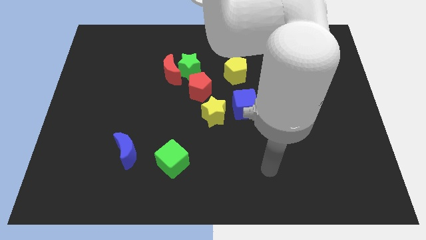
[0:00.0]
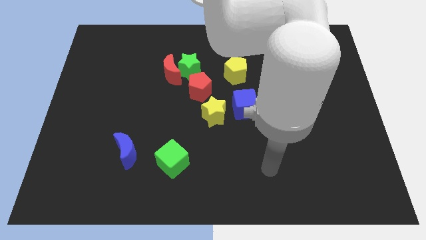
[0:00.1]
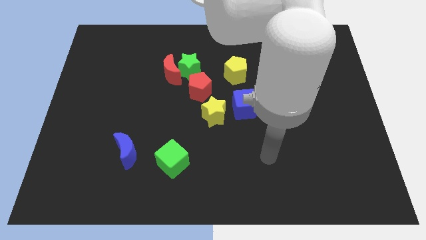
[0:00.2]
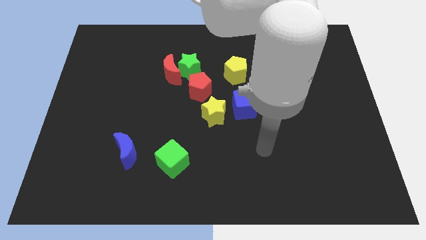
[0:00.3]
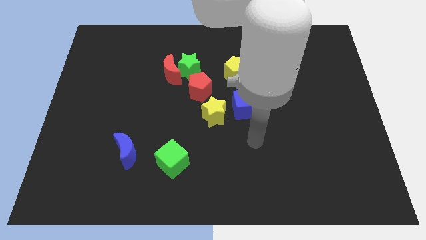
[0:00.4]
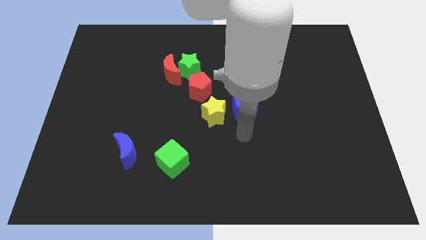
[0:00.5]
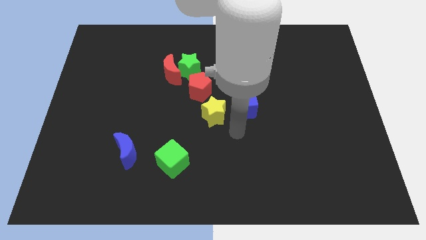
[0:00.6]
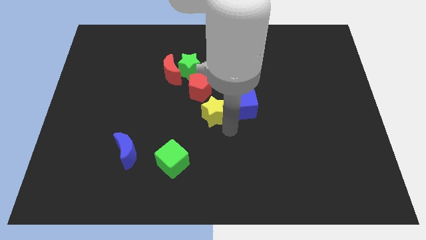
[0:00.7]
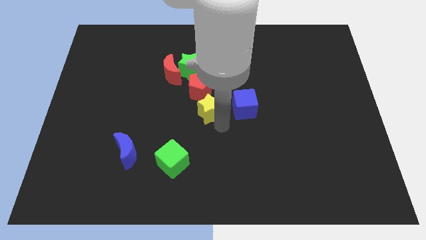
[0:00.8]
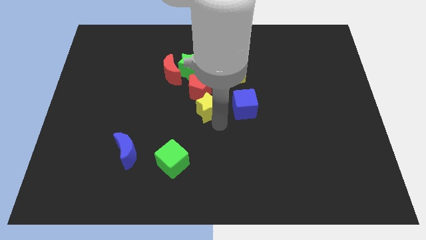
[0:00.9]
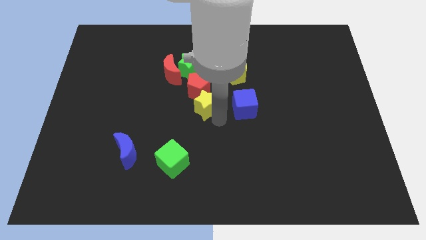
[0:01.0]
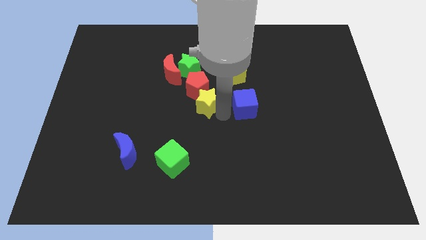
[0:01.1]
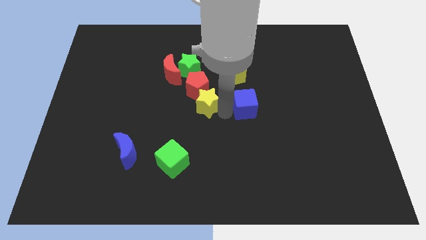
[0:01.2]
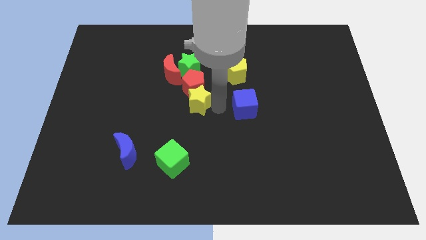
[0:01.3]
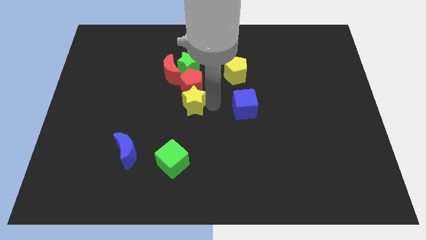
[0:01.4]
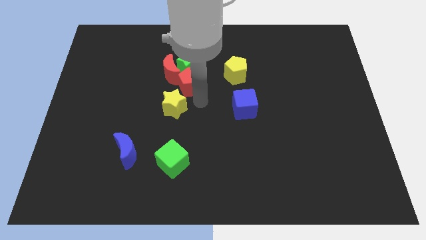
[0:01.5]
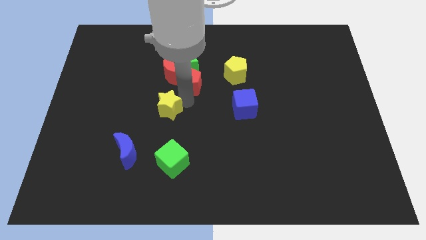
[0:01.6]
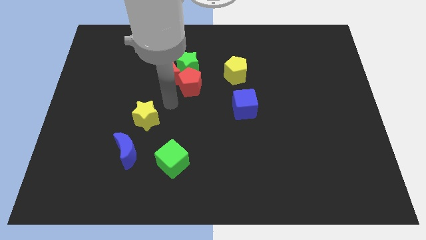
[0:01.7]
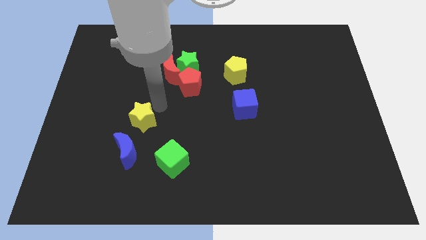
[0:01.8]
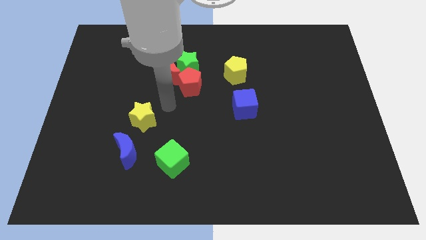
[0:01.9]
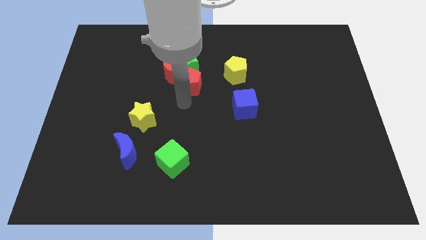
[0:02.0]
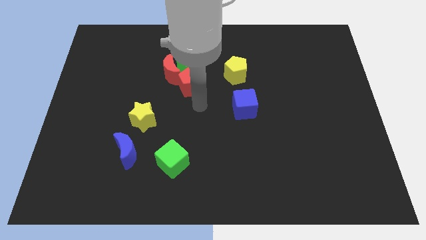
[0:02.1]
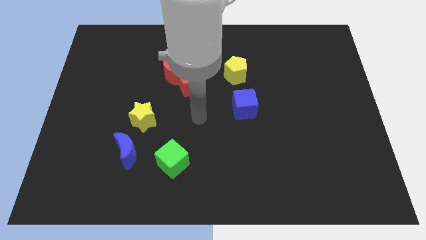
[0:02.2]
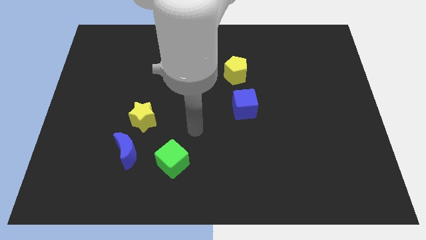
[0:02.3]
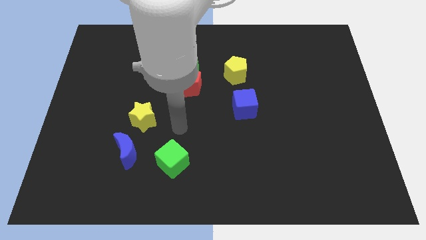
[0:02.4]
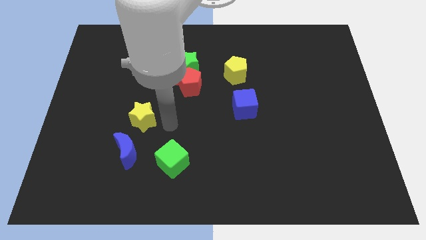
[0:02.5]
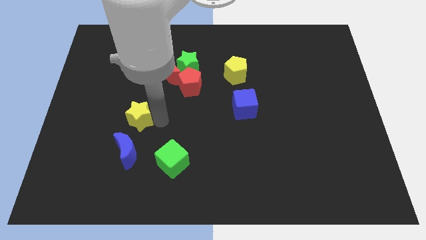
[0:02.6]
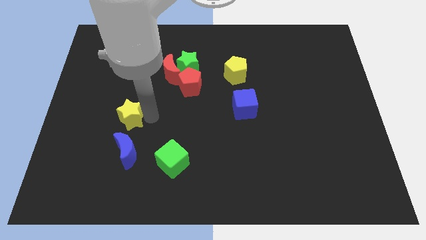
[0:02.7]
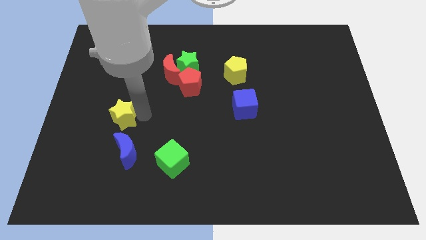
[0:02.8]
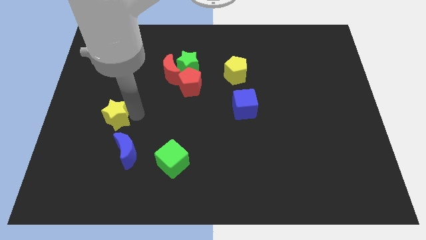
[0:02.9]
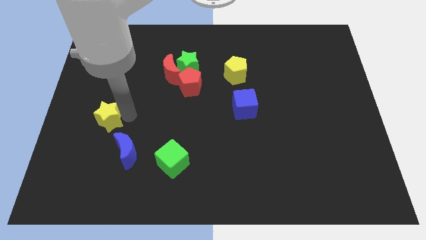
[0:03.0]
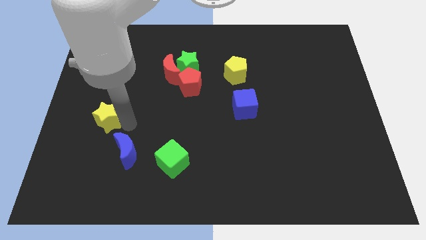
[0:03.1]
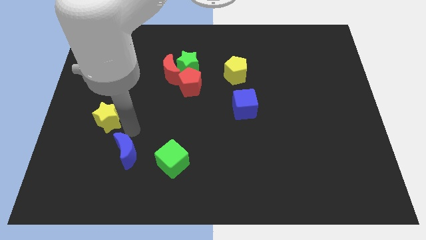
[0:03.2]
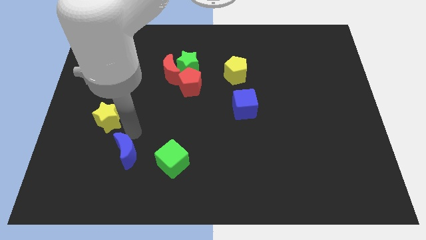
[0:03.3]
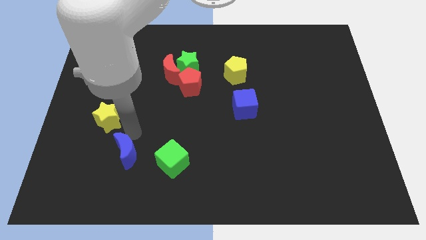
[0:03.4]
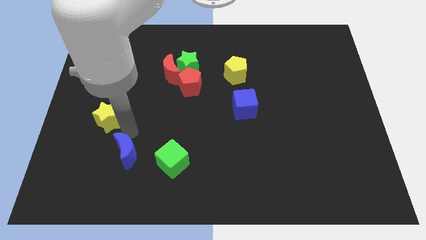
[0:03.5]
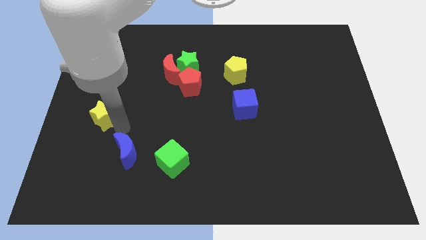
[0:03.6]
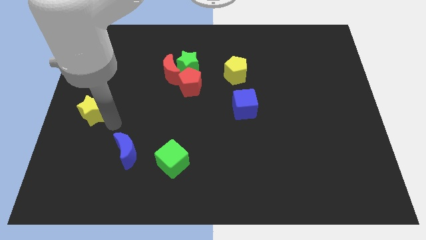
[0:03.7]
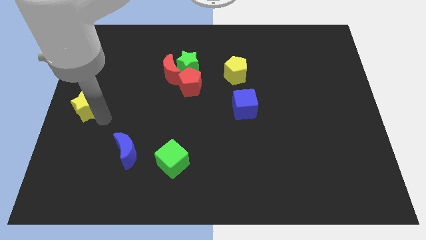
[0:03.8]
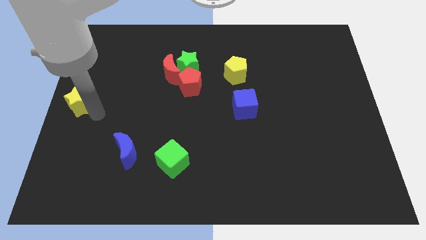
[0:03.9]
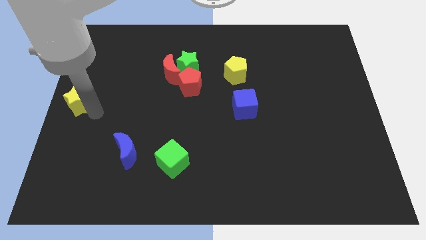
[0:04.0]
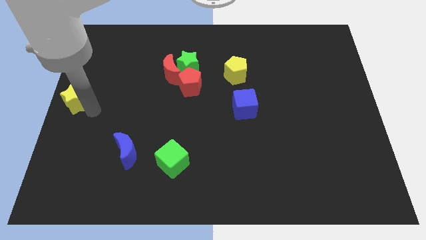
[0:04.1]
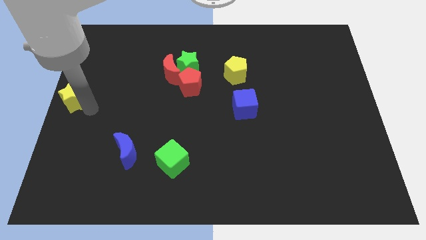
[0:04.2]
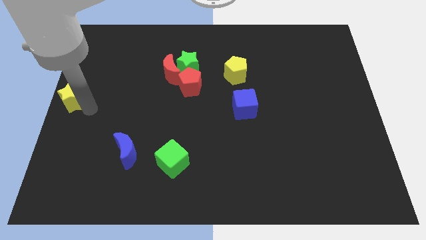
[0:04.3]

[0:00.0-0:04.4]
move the yellow star to the left side of the board

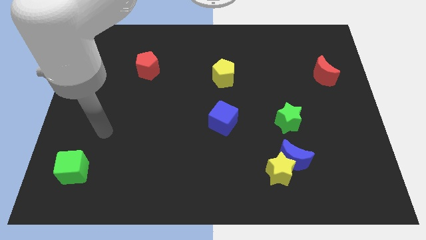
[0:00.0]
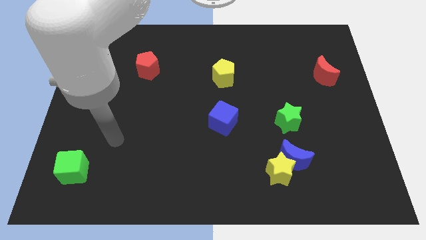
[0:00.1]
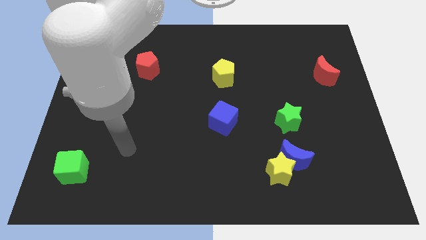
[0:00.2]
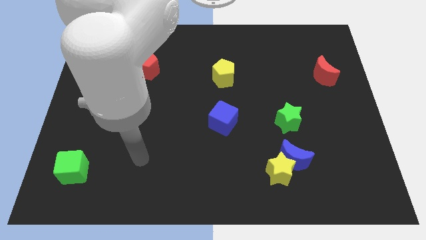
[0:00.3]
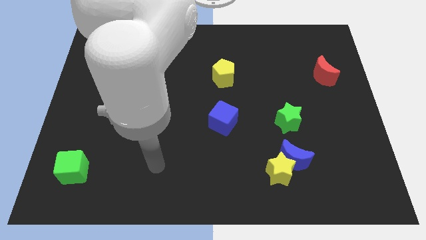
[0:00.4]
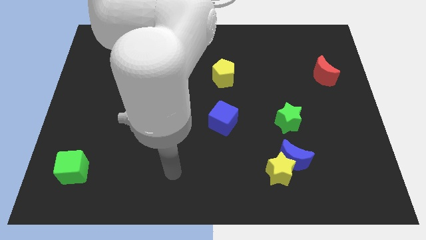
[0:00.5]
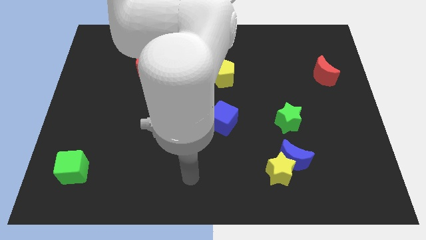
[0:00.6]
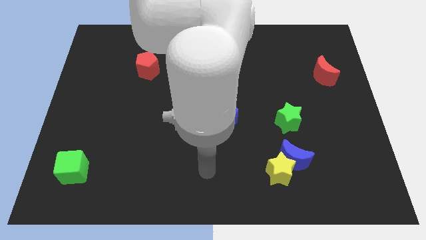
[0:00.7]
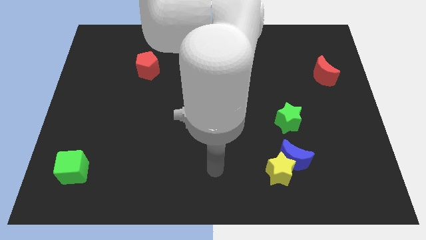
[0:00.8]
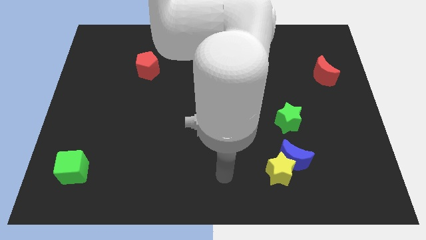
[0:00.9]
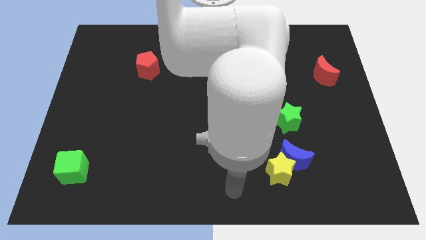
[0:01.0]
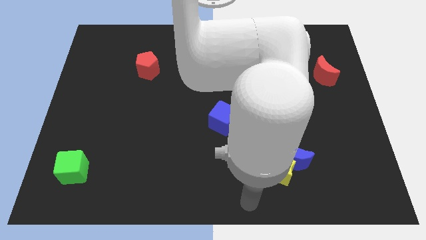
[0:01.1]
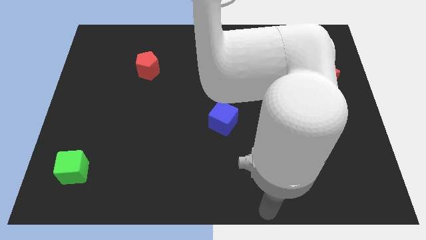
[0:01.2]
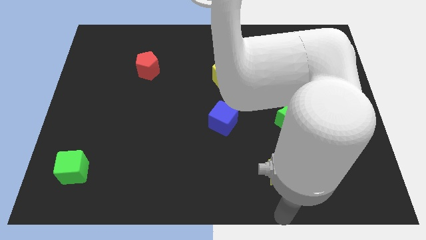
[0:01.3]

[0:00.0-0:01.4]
point your arm at the bottom of the yellow star

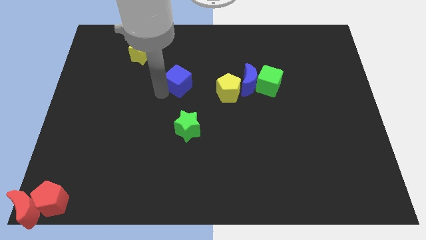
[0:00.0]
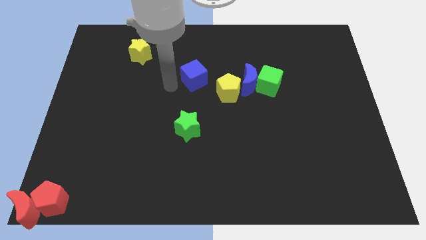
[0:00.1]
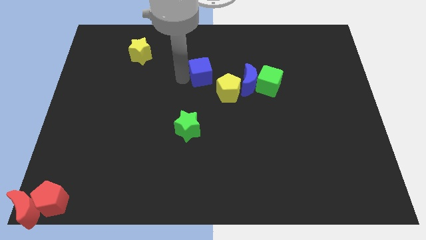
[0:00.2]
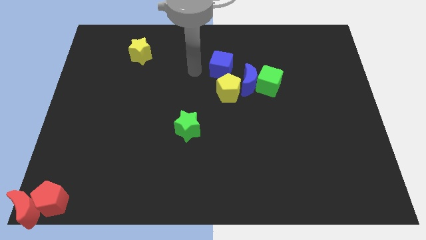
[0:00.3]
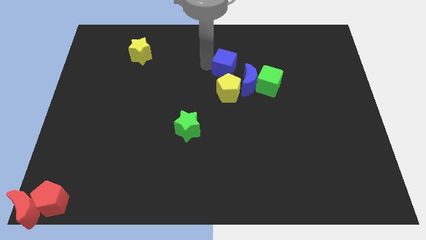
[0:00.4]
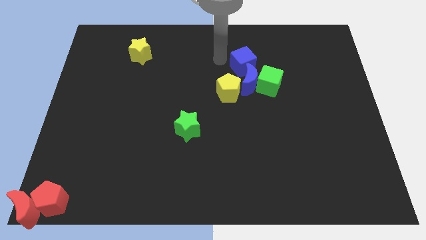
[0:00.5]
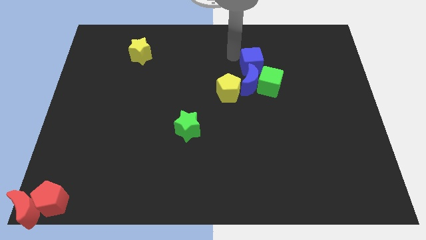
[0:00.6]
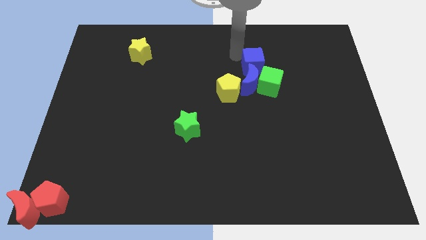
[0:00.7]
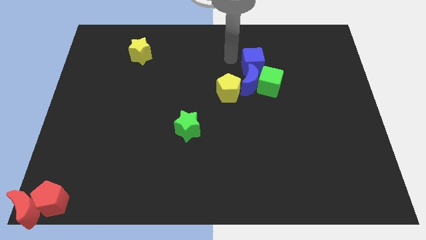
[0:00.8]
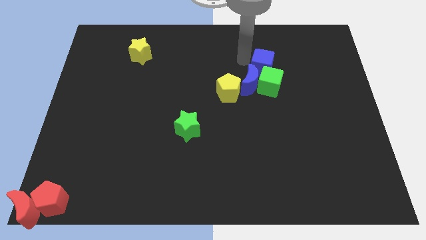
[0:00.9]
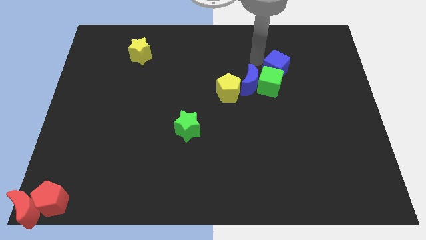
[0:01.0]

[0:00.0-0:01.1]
push the blue cube above the green cube

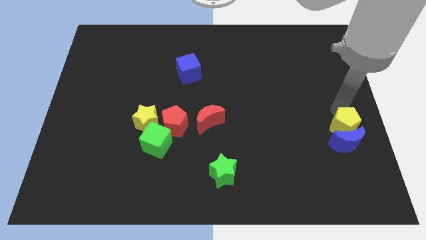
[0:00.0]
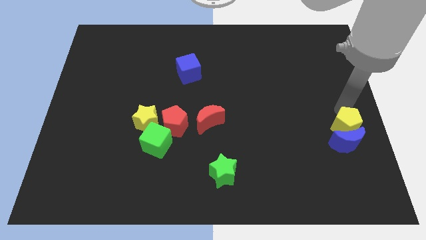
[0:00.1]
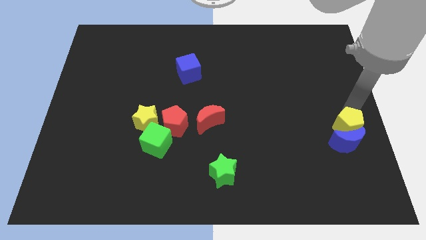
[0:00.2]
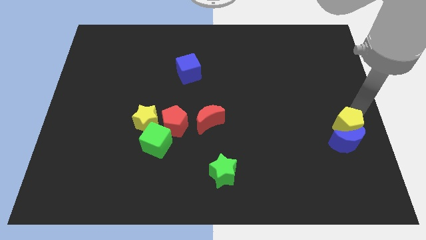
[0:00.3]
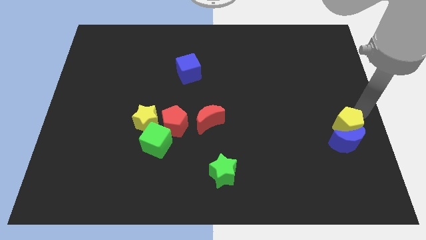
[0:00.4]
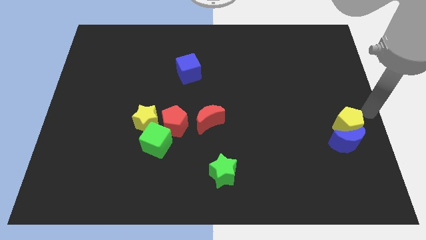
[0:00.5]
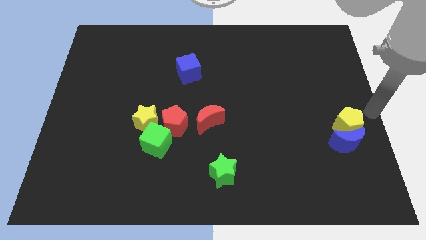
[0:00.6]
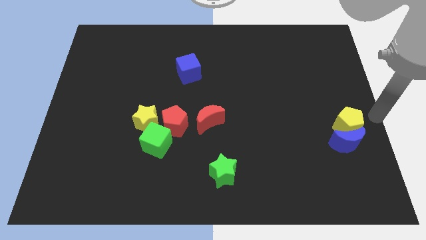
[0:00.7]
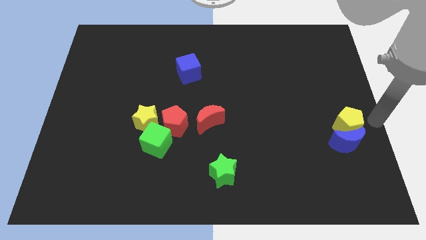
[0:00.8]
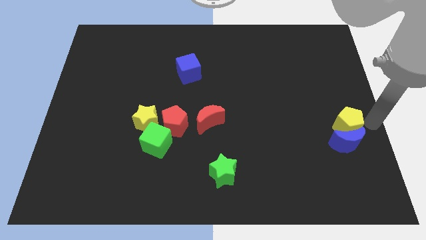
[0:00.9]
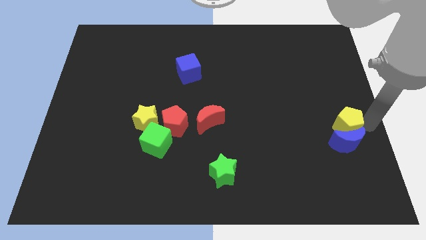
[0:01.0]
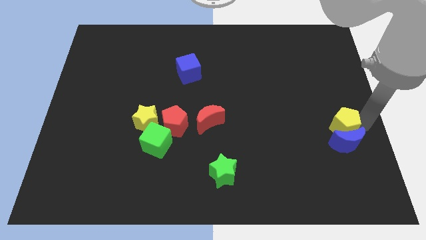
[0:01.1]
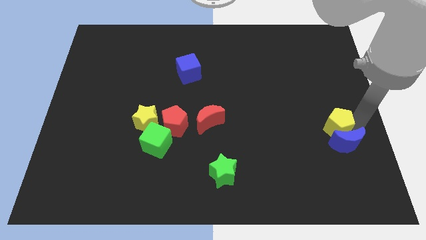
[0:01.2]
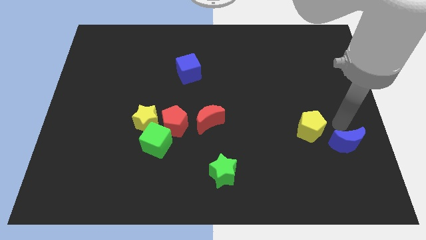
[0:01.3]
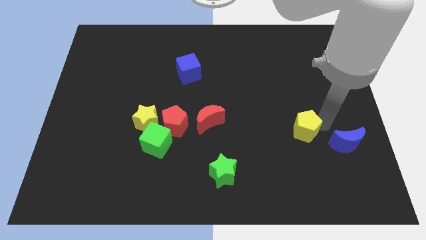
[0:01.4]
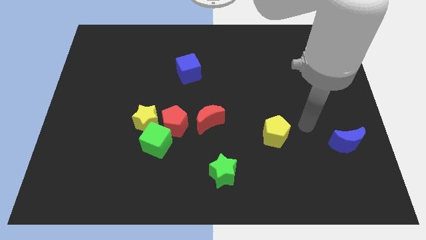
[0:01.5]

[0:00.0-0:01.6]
separate the yellow pentagon from blue moon

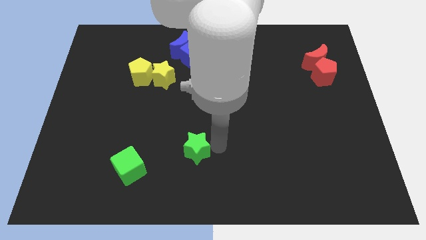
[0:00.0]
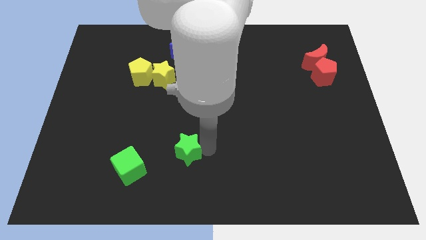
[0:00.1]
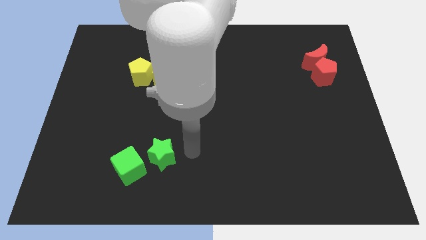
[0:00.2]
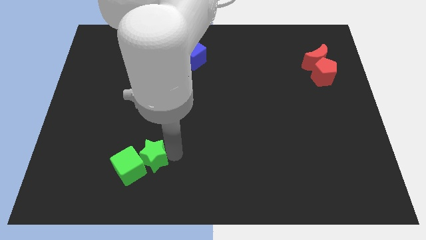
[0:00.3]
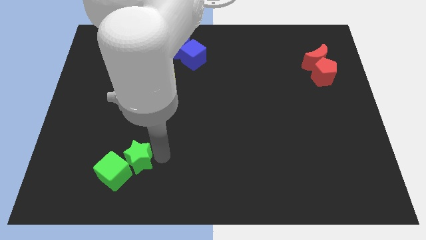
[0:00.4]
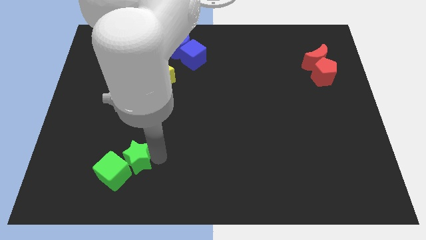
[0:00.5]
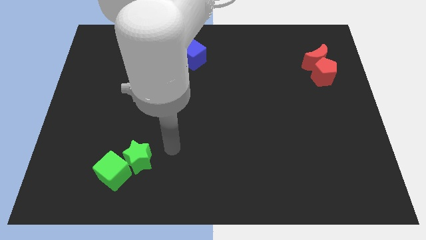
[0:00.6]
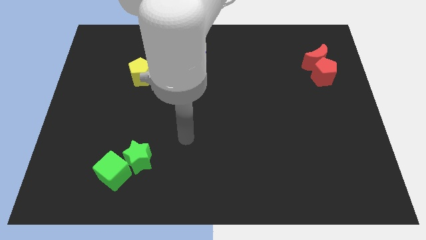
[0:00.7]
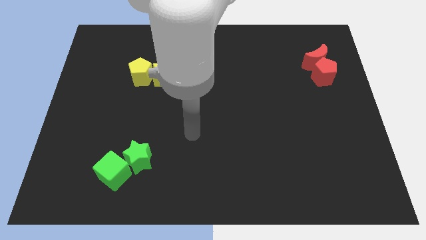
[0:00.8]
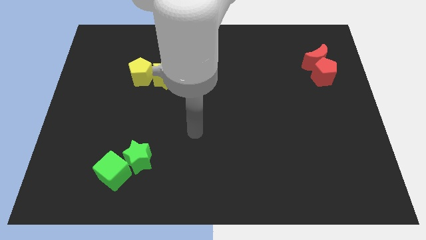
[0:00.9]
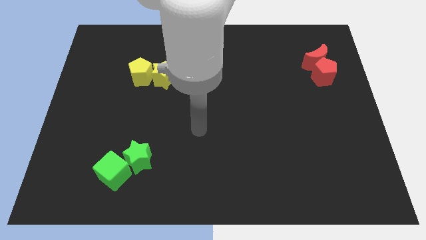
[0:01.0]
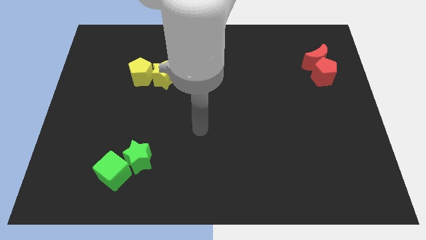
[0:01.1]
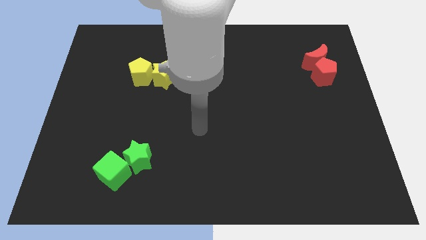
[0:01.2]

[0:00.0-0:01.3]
push the green blocks towards the bottom left corner of the board
